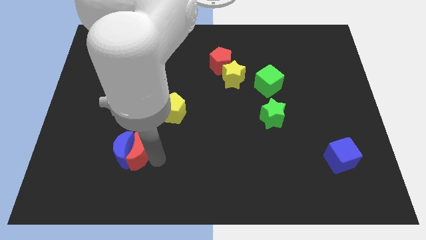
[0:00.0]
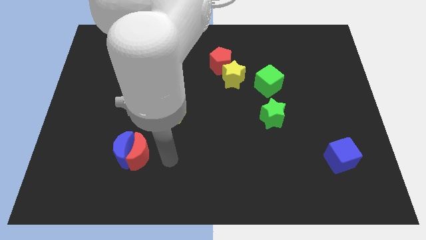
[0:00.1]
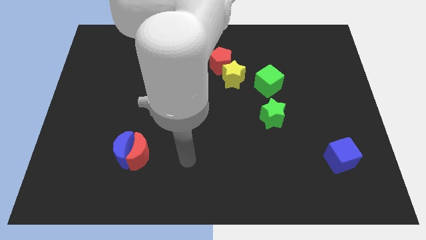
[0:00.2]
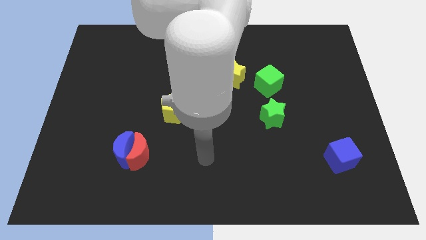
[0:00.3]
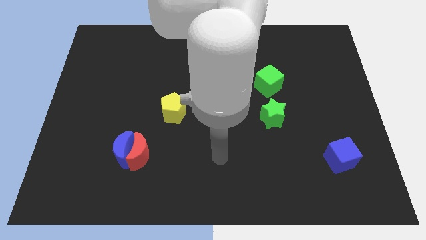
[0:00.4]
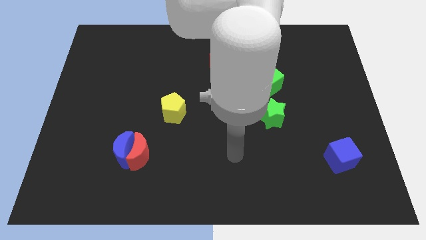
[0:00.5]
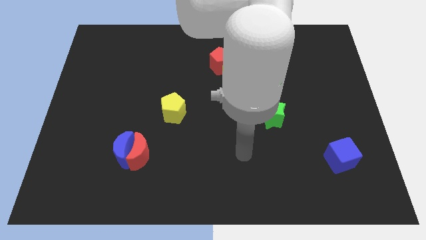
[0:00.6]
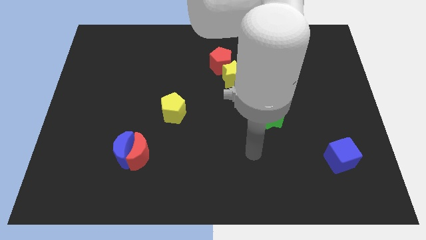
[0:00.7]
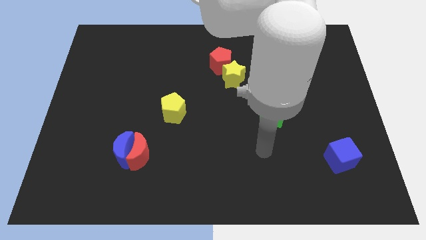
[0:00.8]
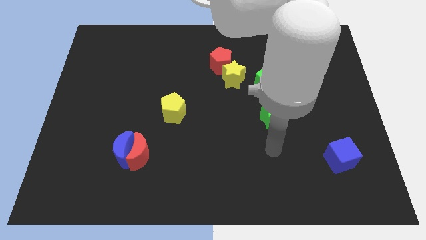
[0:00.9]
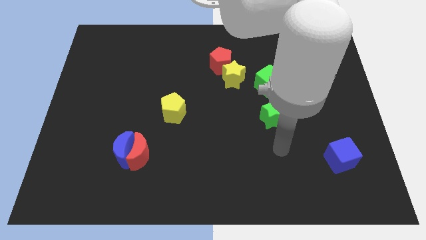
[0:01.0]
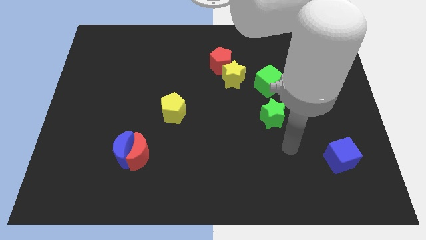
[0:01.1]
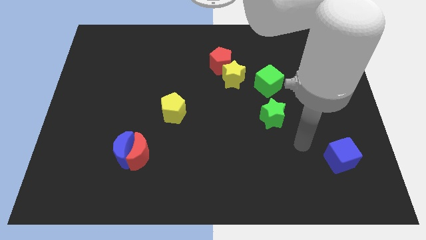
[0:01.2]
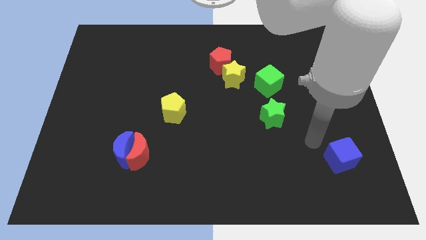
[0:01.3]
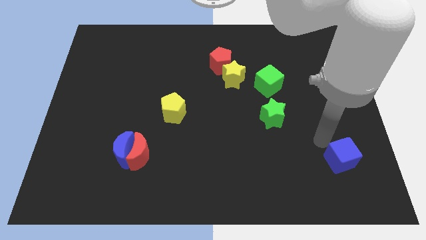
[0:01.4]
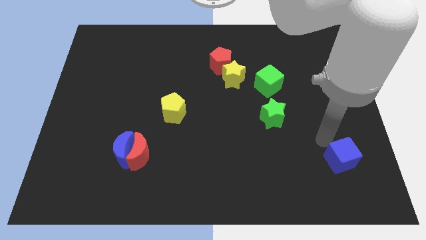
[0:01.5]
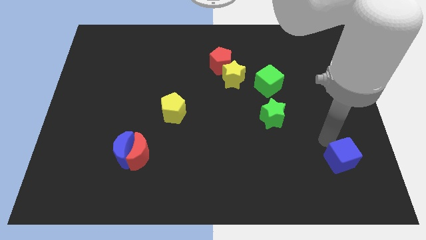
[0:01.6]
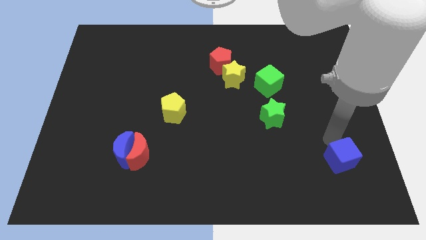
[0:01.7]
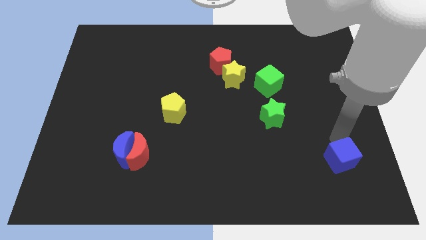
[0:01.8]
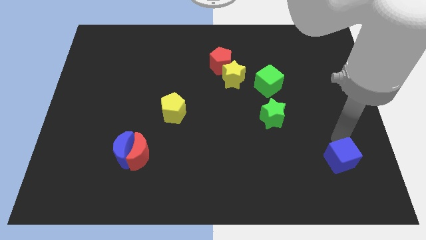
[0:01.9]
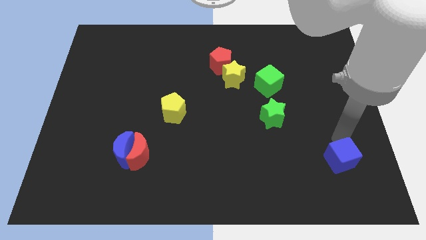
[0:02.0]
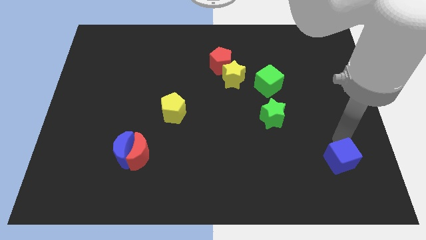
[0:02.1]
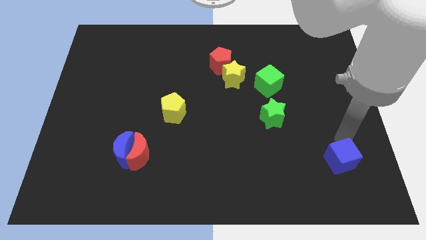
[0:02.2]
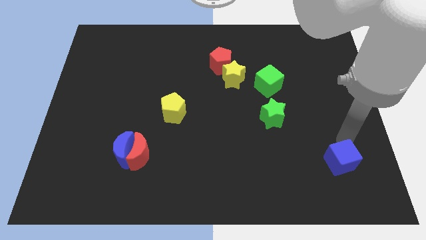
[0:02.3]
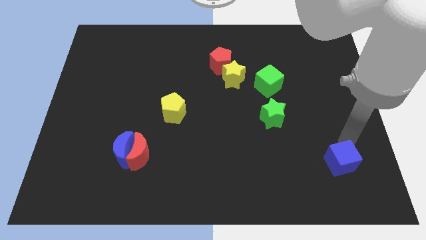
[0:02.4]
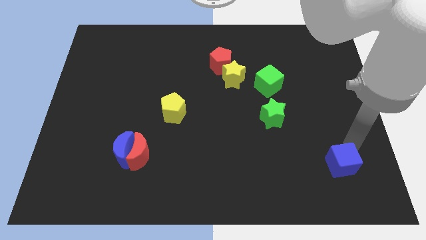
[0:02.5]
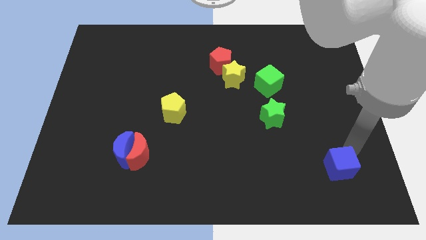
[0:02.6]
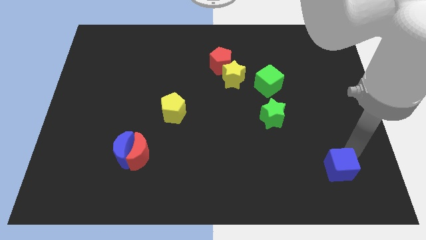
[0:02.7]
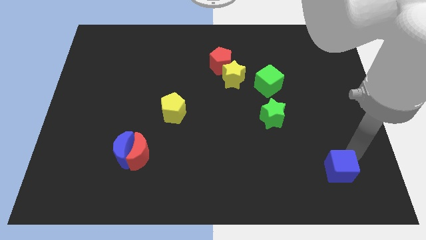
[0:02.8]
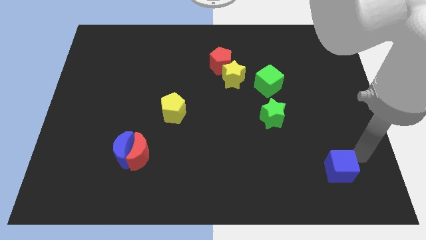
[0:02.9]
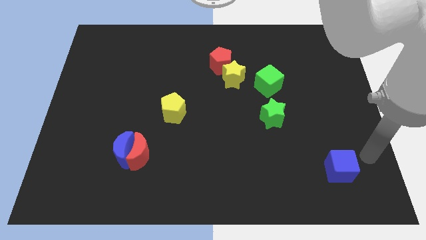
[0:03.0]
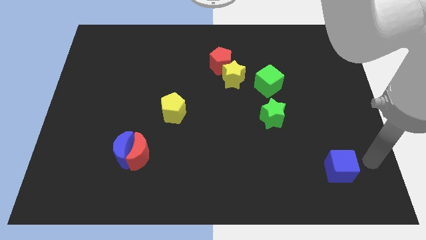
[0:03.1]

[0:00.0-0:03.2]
move the blue cube towards bottom right

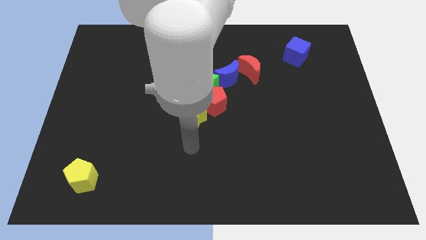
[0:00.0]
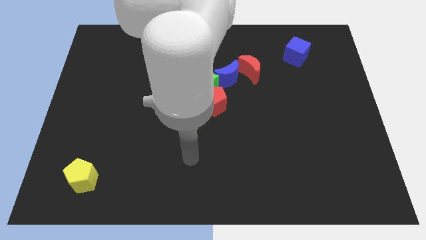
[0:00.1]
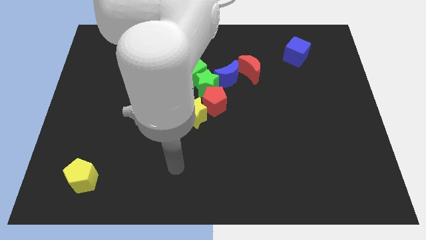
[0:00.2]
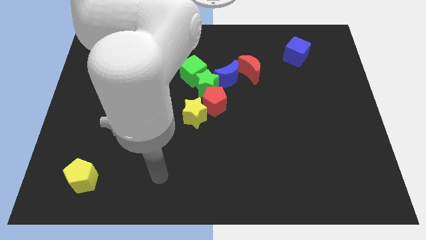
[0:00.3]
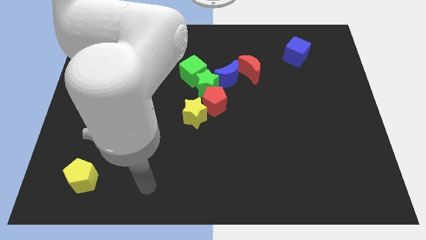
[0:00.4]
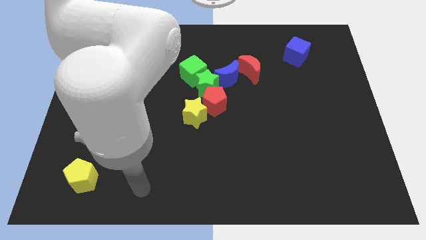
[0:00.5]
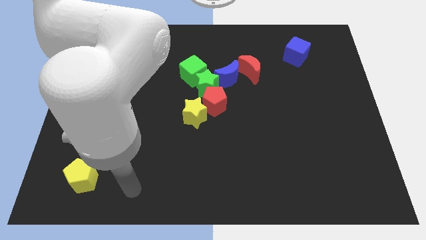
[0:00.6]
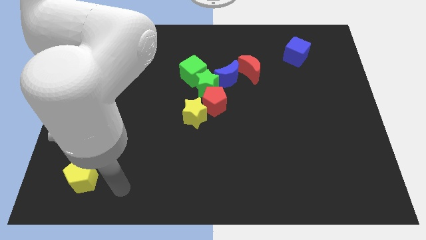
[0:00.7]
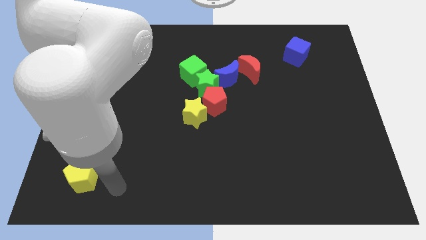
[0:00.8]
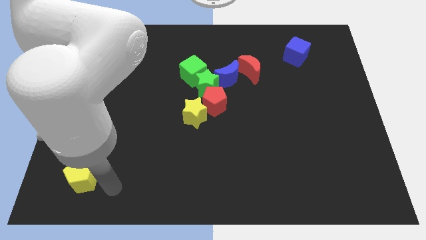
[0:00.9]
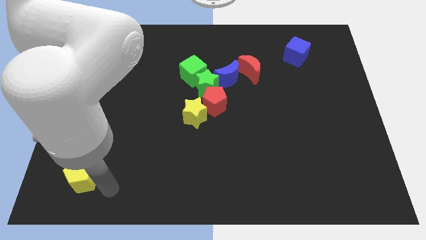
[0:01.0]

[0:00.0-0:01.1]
point your arm to the right side of the yellow pentagon

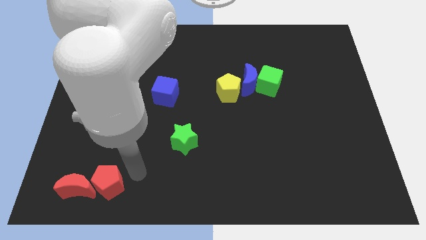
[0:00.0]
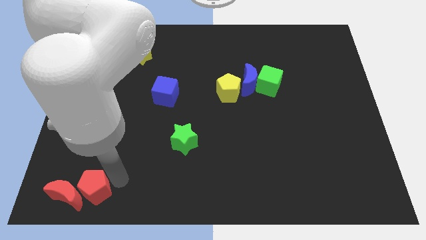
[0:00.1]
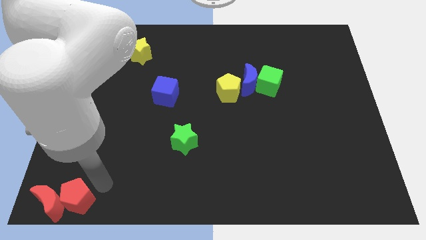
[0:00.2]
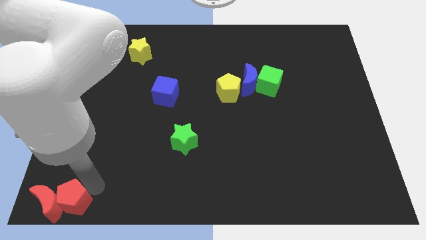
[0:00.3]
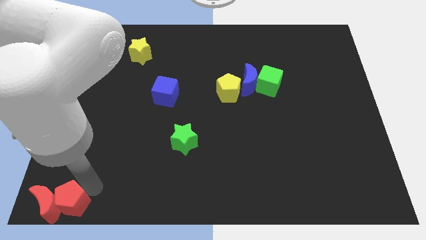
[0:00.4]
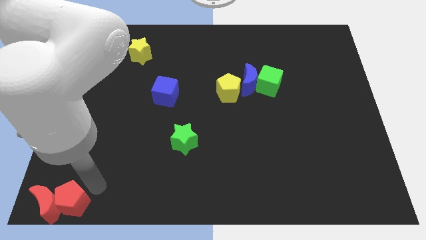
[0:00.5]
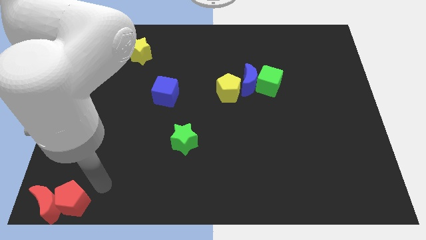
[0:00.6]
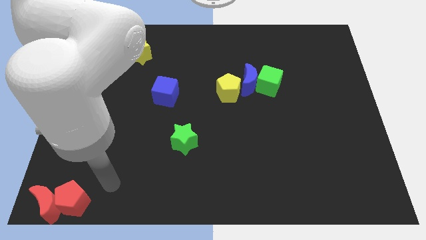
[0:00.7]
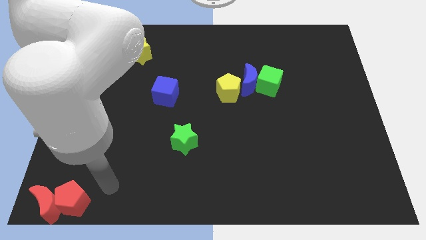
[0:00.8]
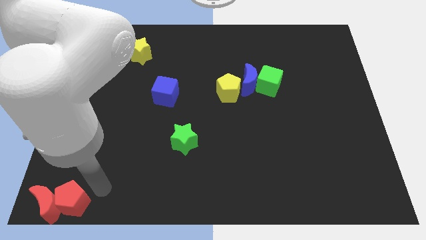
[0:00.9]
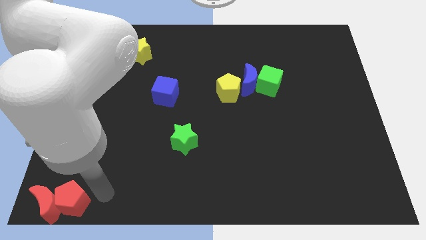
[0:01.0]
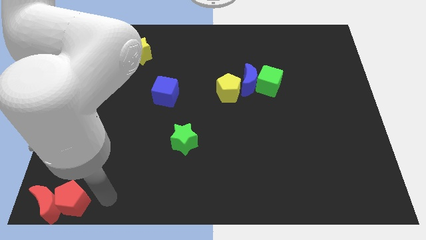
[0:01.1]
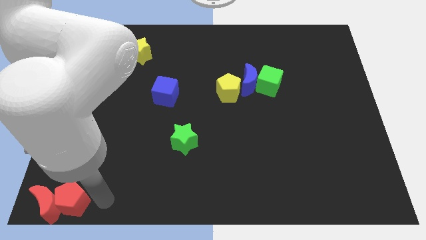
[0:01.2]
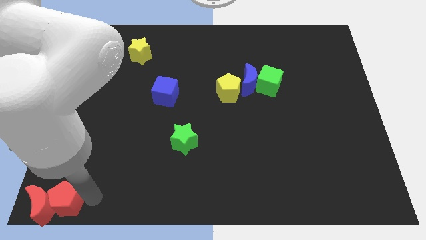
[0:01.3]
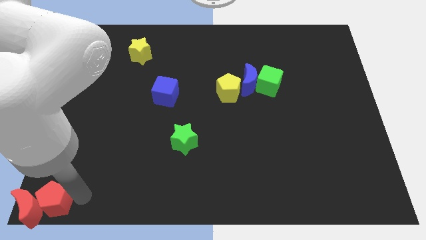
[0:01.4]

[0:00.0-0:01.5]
move the red blocks to the bottom left corner of the board

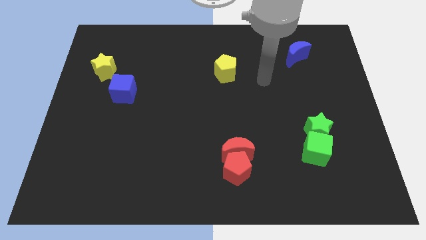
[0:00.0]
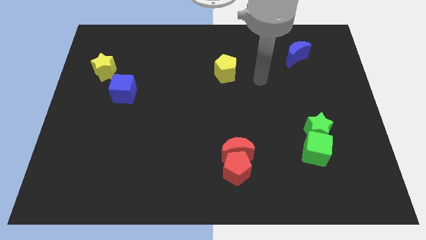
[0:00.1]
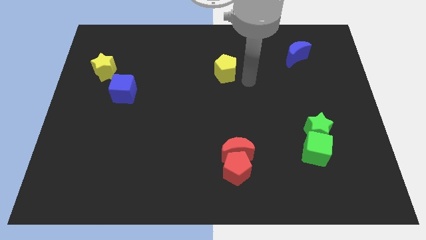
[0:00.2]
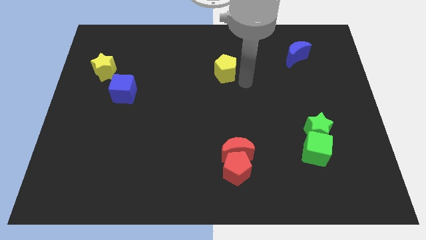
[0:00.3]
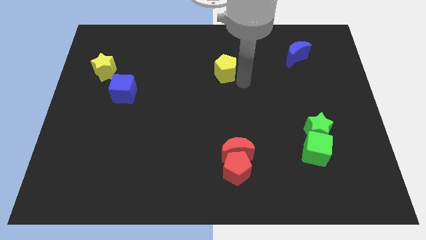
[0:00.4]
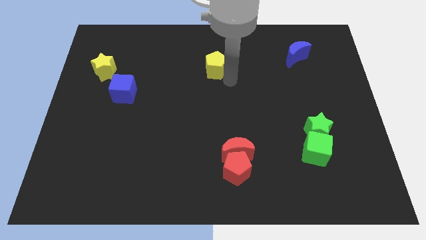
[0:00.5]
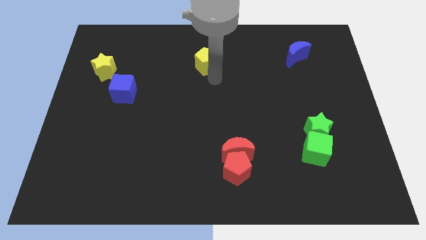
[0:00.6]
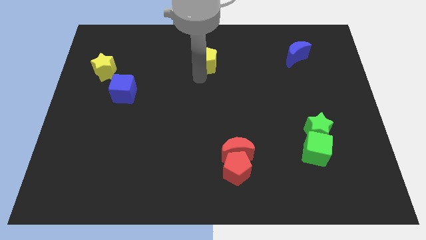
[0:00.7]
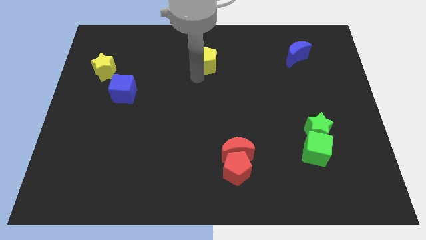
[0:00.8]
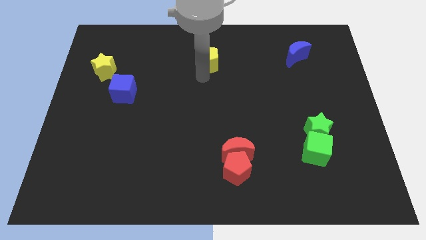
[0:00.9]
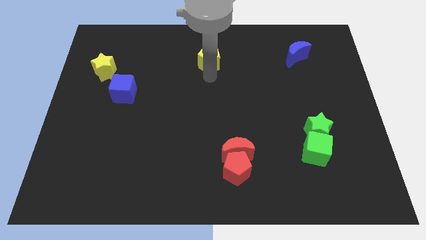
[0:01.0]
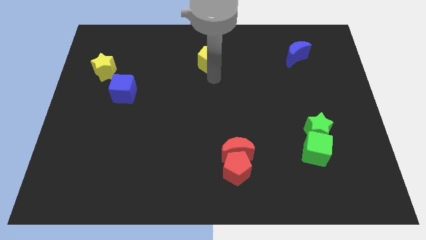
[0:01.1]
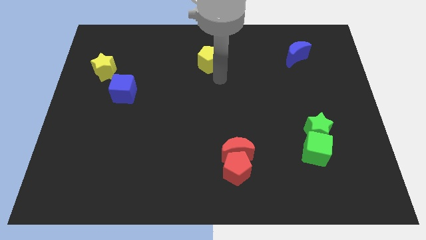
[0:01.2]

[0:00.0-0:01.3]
push yellow pentagon slightly upwards

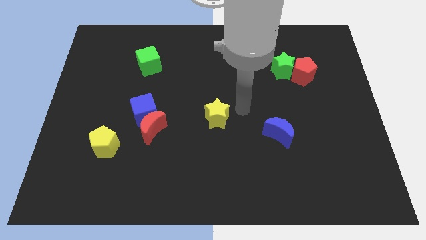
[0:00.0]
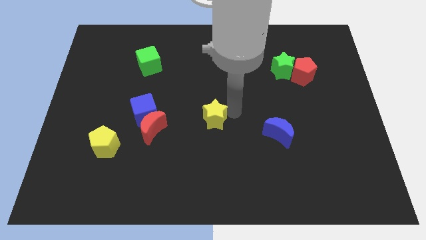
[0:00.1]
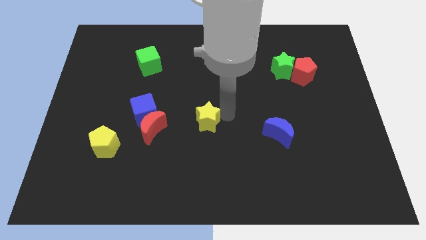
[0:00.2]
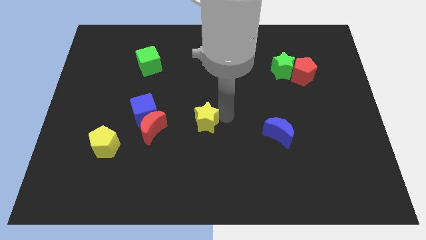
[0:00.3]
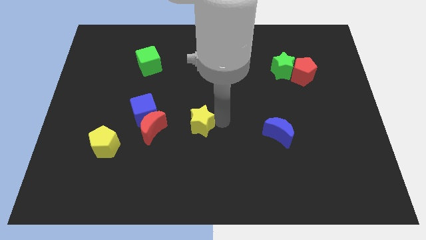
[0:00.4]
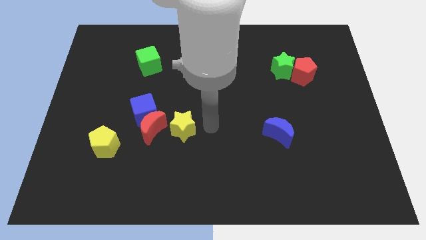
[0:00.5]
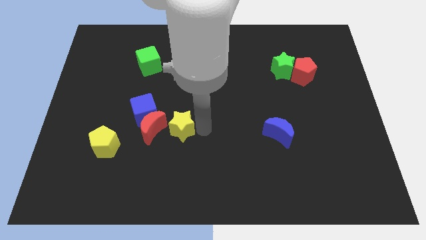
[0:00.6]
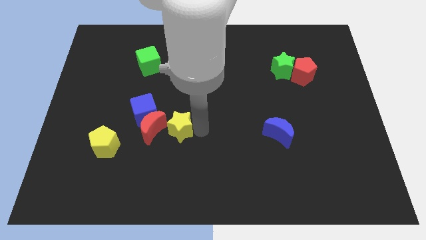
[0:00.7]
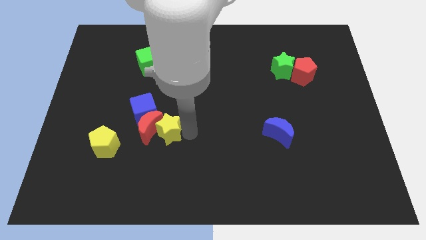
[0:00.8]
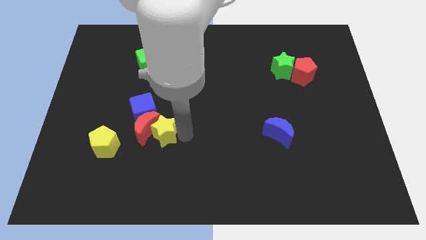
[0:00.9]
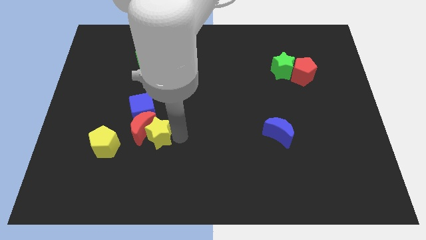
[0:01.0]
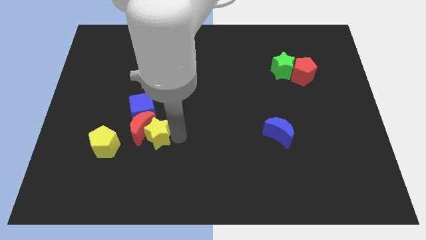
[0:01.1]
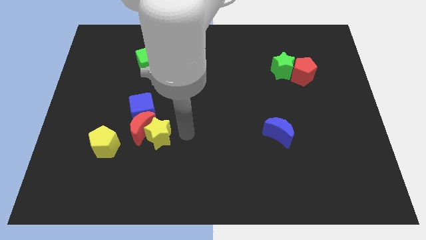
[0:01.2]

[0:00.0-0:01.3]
push the red moon with yellow star

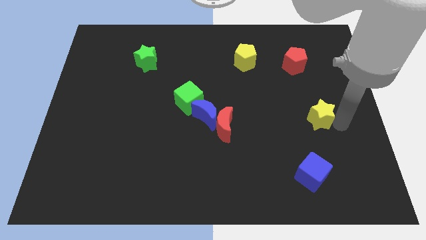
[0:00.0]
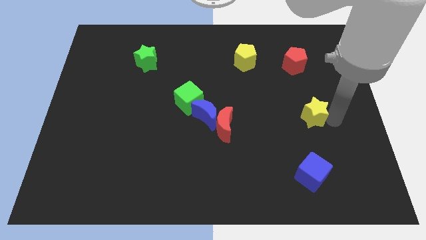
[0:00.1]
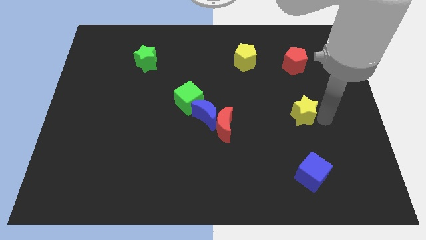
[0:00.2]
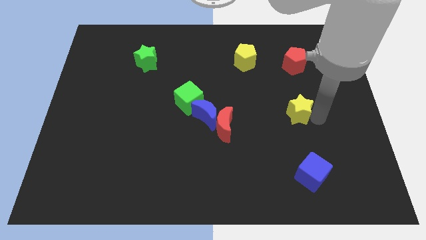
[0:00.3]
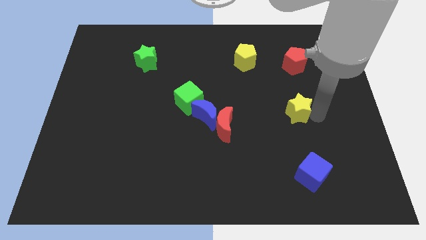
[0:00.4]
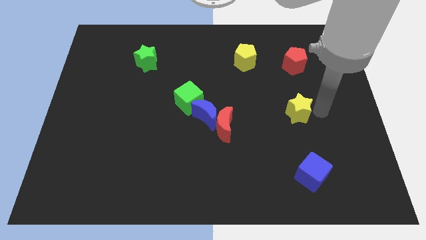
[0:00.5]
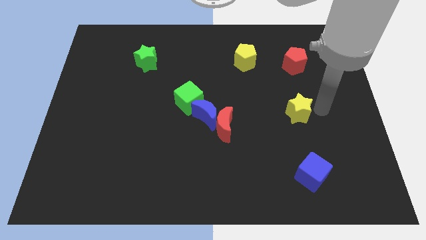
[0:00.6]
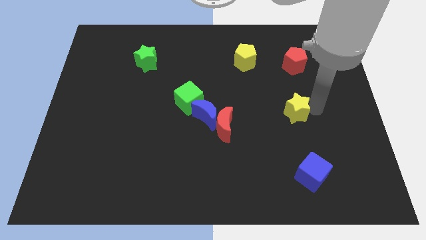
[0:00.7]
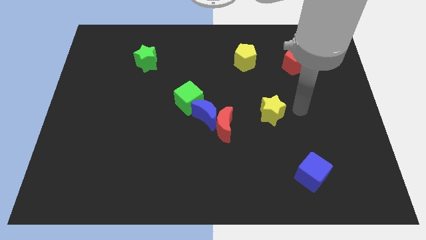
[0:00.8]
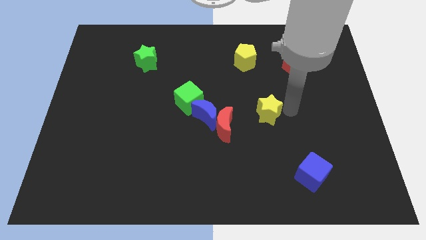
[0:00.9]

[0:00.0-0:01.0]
push the yellow star to the center
